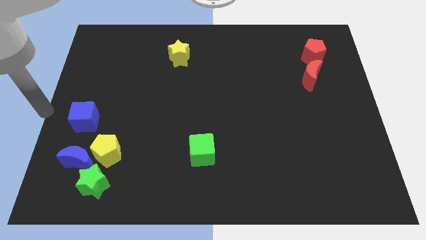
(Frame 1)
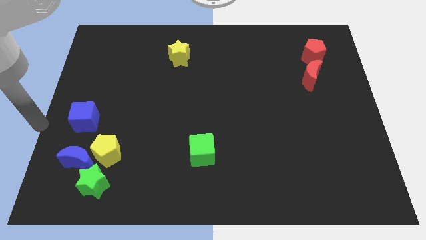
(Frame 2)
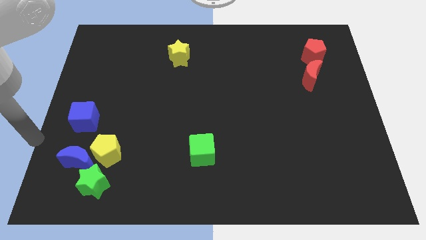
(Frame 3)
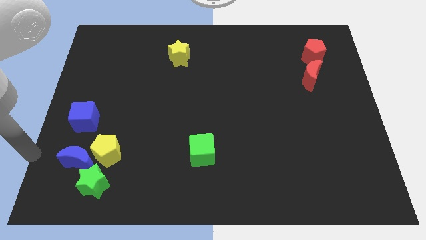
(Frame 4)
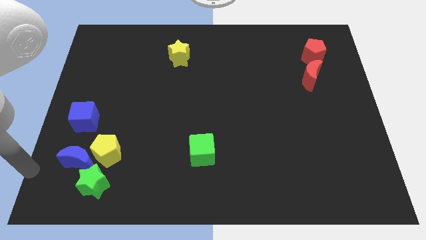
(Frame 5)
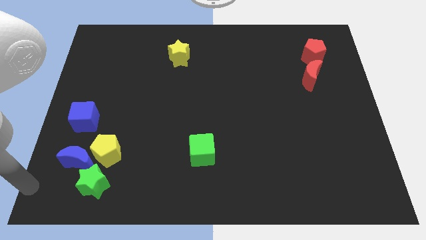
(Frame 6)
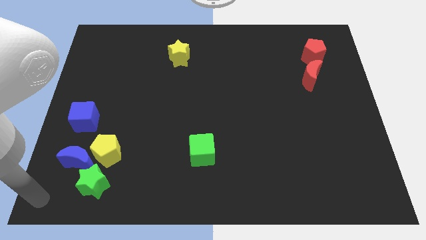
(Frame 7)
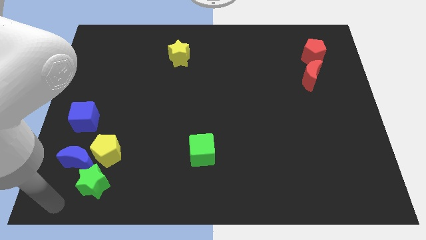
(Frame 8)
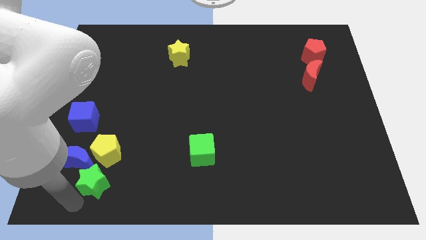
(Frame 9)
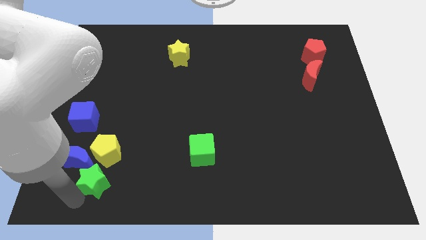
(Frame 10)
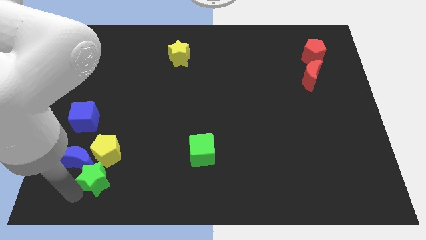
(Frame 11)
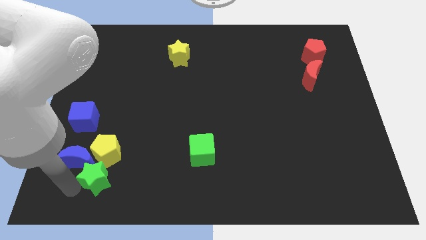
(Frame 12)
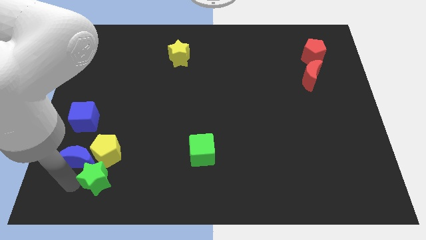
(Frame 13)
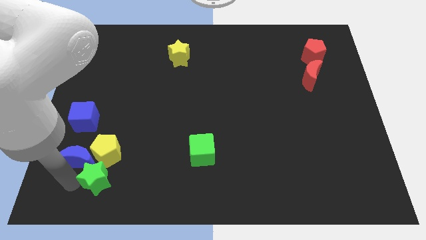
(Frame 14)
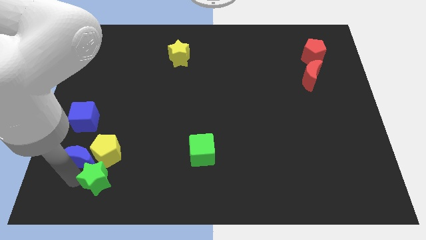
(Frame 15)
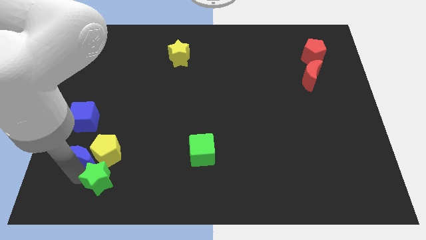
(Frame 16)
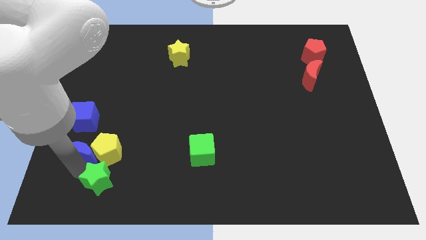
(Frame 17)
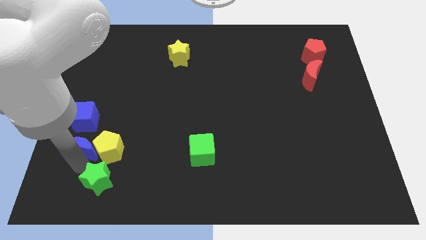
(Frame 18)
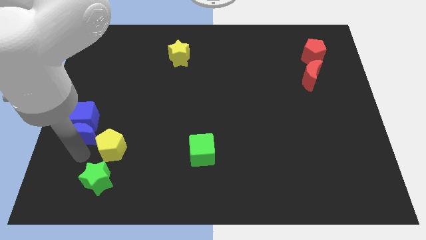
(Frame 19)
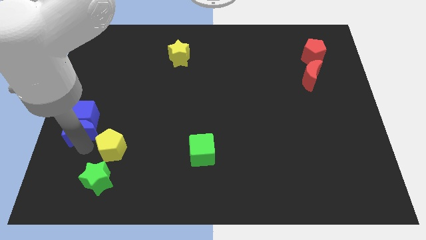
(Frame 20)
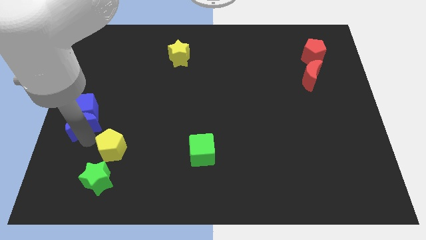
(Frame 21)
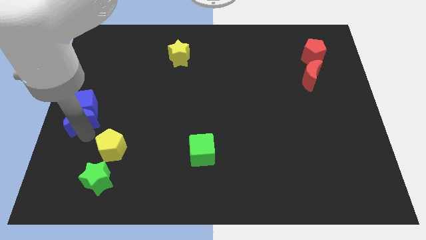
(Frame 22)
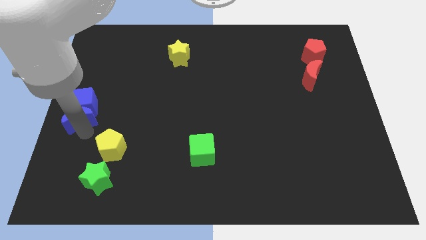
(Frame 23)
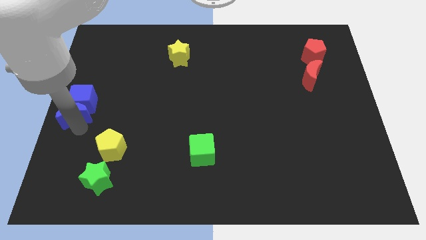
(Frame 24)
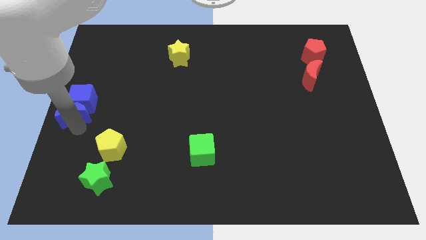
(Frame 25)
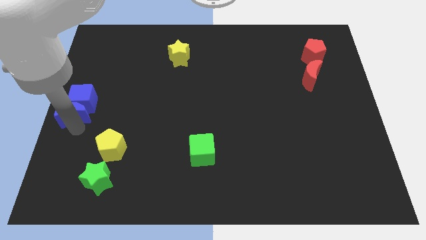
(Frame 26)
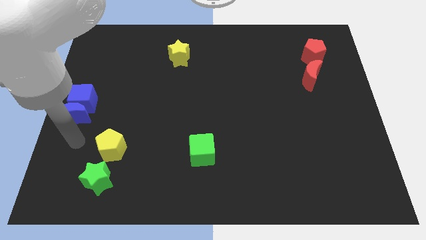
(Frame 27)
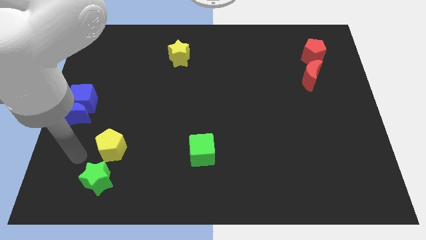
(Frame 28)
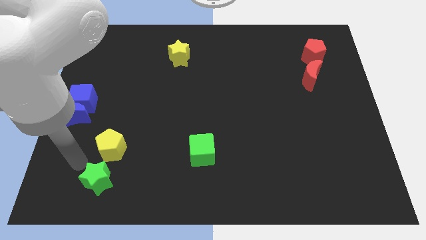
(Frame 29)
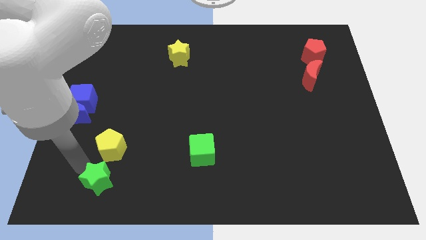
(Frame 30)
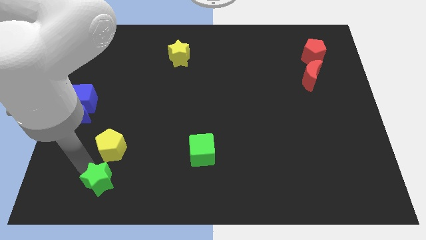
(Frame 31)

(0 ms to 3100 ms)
push blue crescent and blue cube towards left center of the board

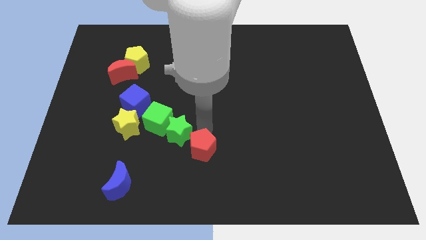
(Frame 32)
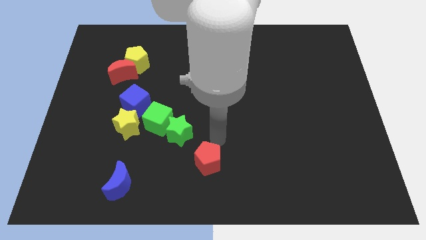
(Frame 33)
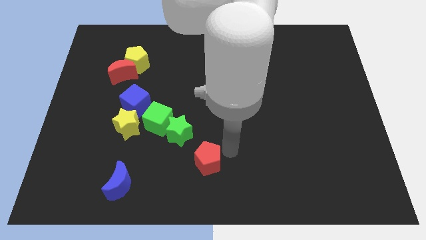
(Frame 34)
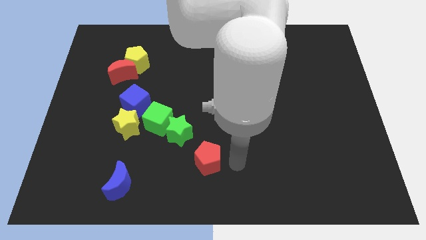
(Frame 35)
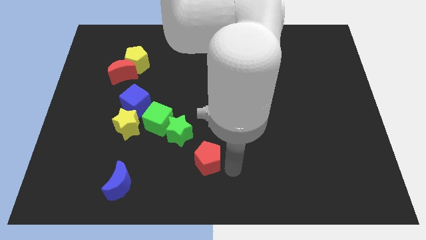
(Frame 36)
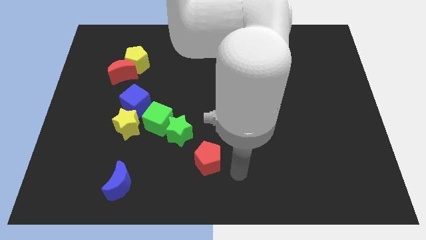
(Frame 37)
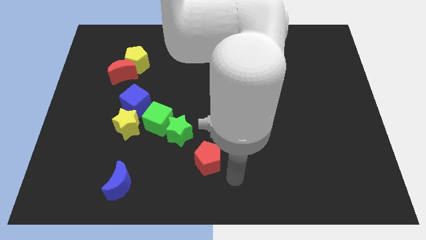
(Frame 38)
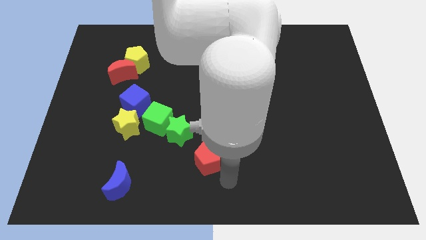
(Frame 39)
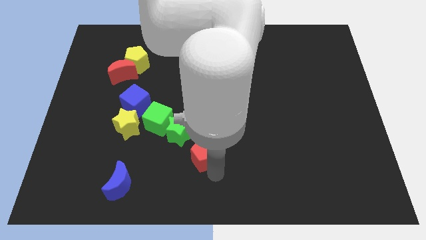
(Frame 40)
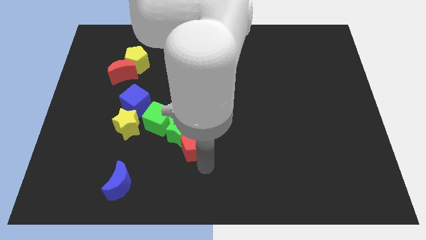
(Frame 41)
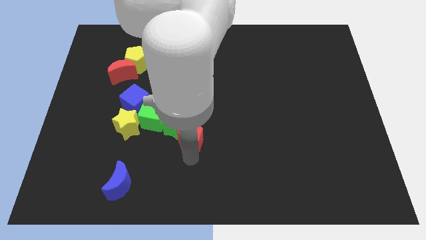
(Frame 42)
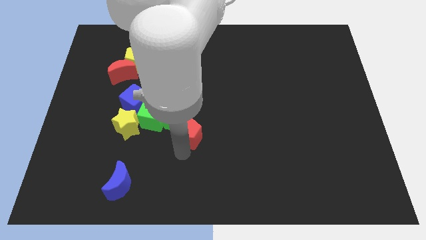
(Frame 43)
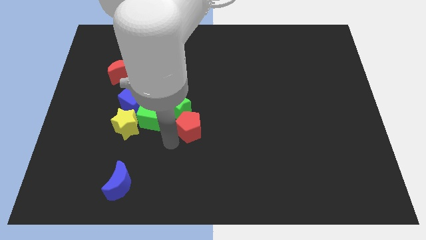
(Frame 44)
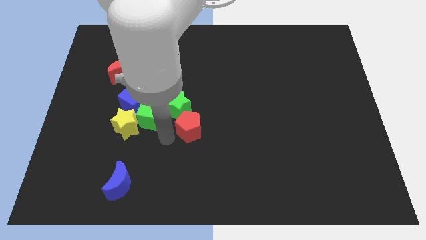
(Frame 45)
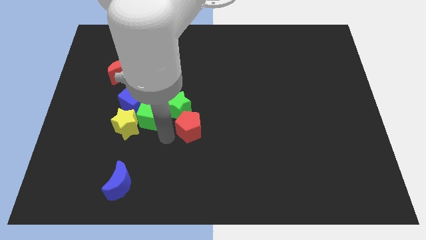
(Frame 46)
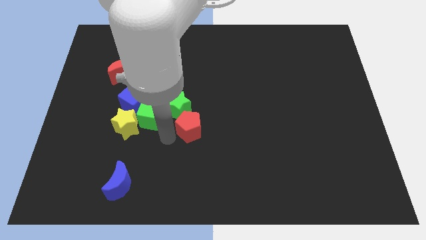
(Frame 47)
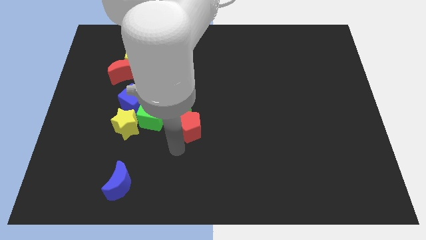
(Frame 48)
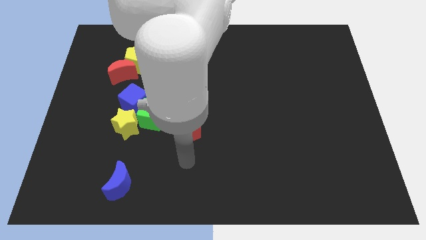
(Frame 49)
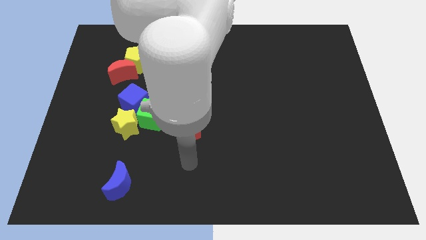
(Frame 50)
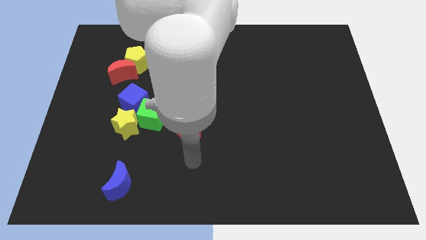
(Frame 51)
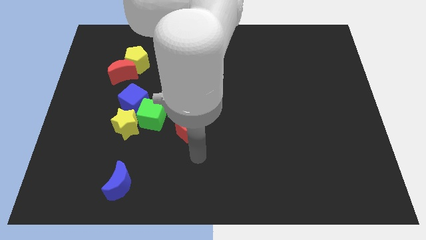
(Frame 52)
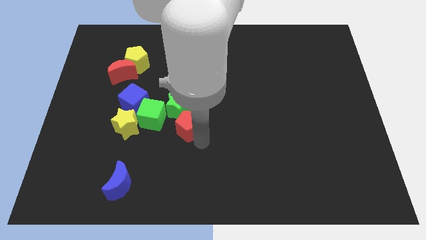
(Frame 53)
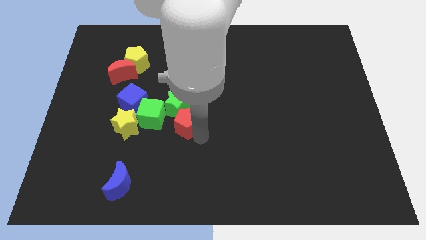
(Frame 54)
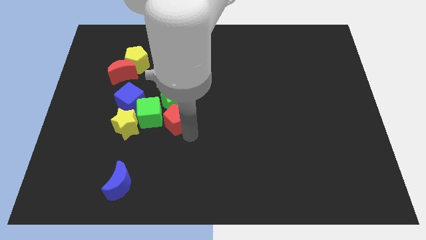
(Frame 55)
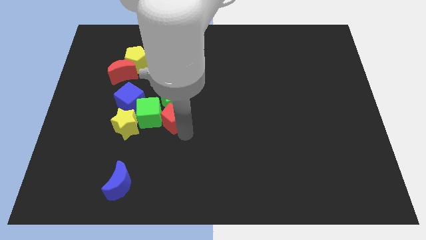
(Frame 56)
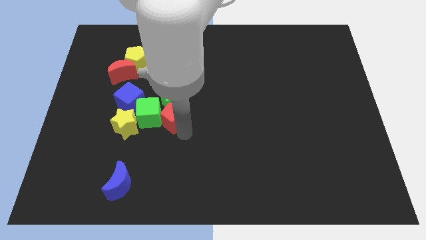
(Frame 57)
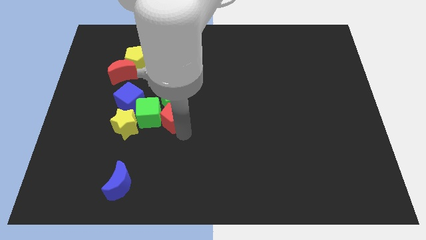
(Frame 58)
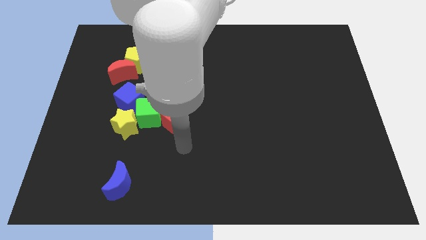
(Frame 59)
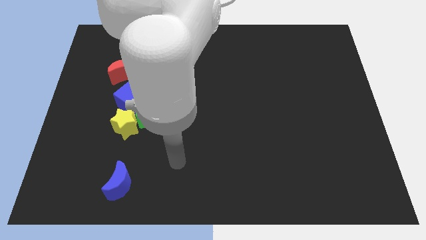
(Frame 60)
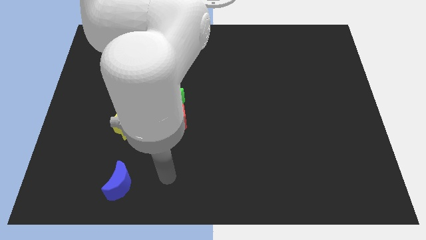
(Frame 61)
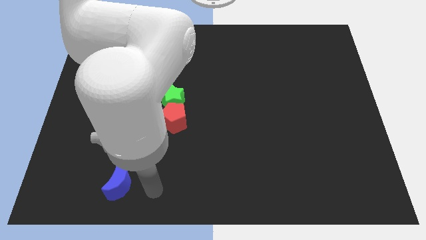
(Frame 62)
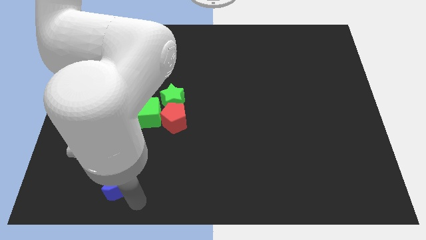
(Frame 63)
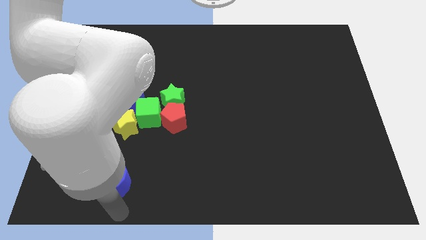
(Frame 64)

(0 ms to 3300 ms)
move the red pentagon towards the top

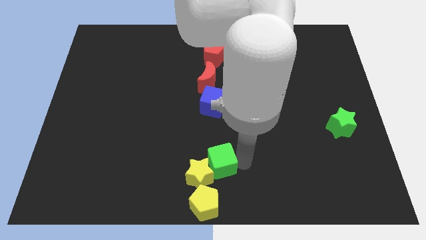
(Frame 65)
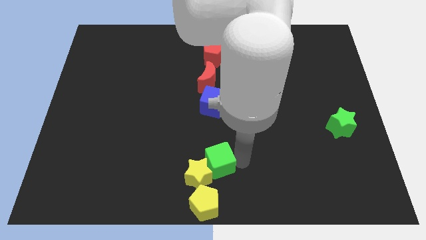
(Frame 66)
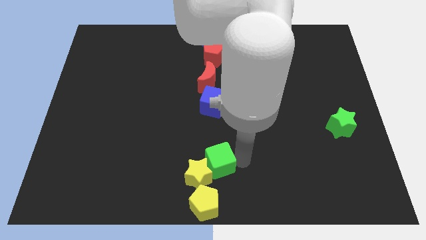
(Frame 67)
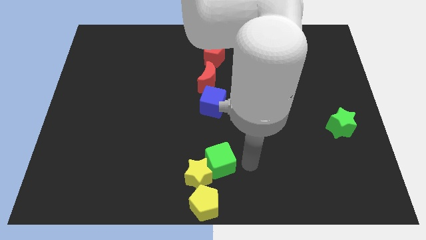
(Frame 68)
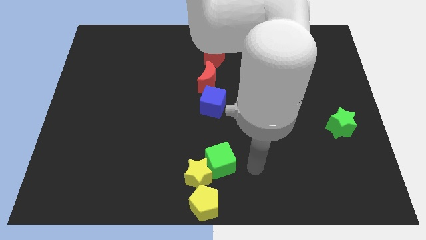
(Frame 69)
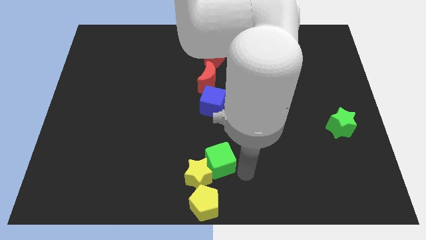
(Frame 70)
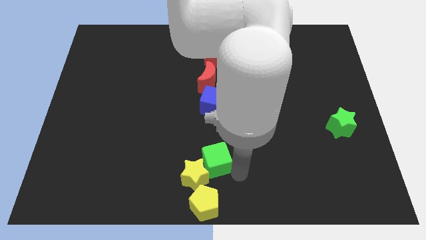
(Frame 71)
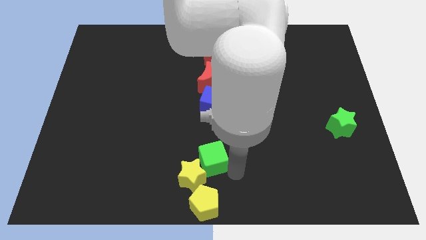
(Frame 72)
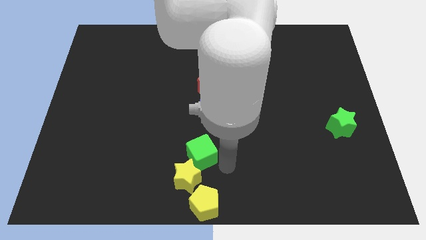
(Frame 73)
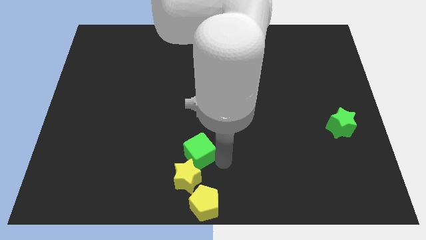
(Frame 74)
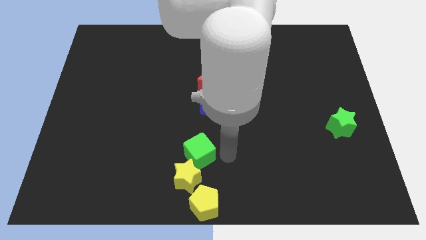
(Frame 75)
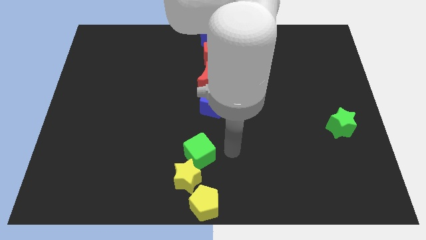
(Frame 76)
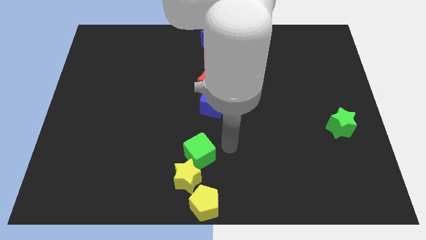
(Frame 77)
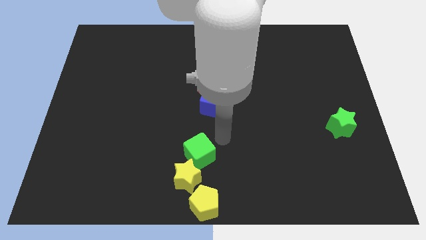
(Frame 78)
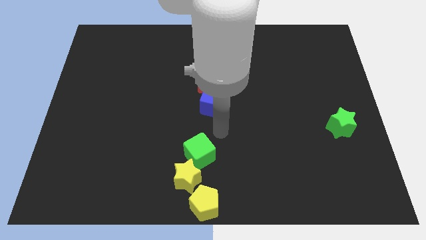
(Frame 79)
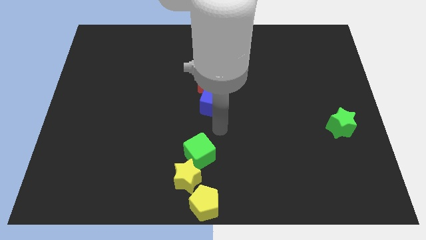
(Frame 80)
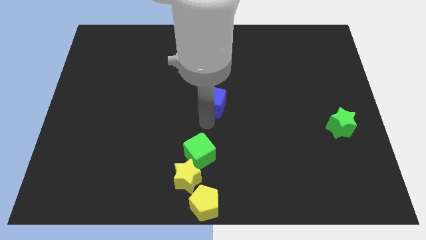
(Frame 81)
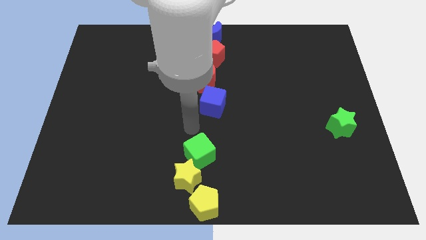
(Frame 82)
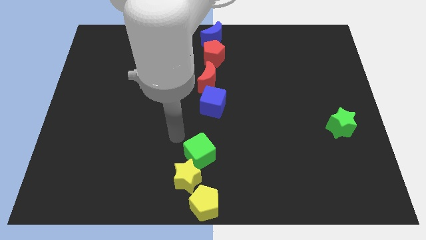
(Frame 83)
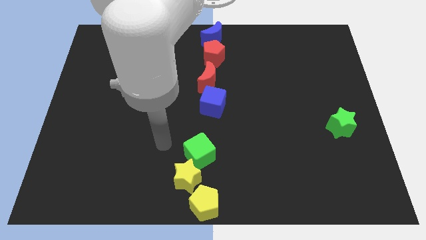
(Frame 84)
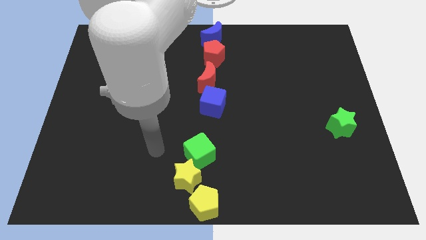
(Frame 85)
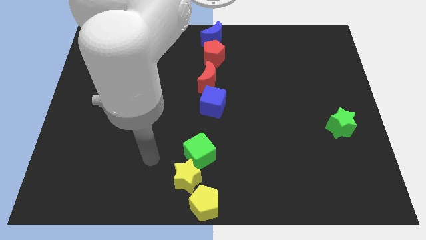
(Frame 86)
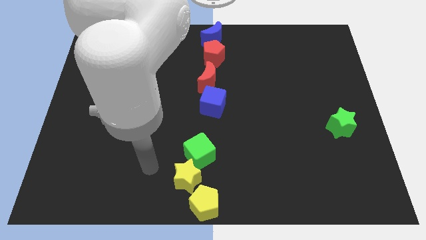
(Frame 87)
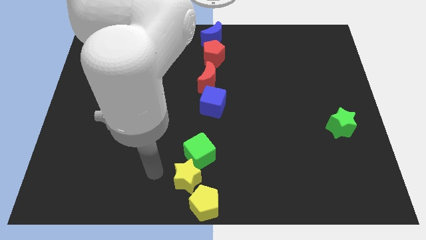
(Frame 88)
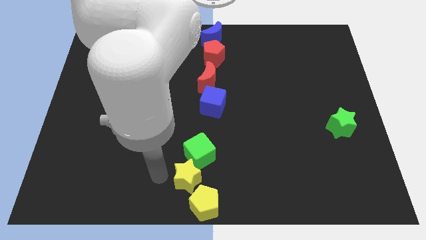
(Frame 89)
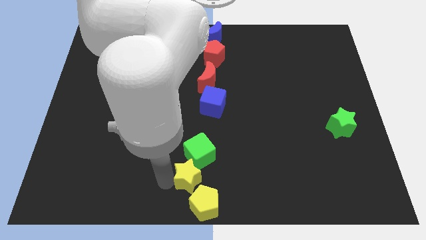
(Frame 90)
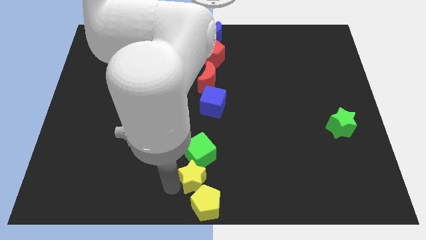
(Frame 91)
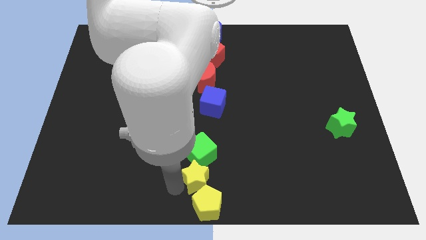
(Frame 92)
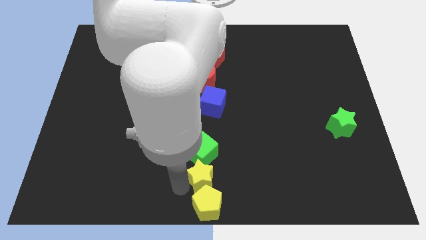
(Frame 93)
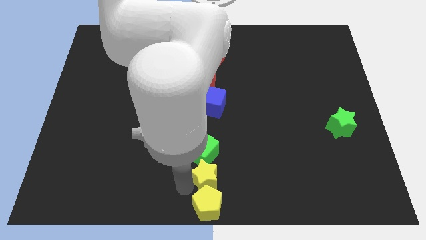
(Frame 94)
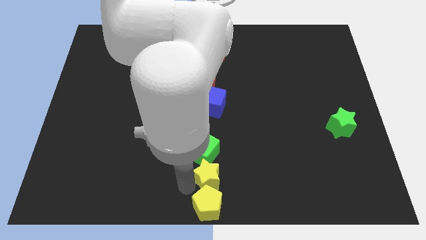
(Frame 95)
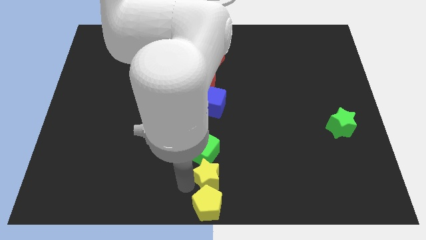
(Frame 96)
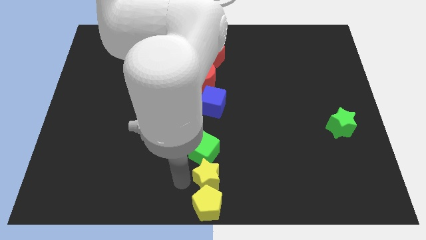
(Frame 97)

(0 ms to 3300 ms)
place the yellow star below green cube
